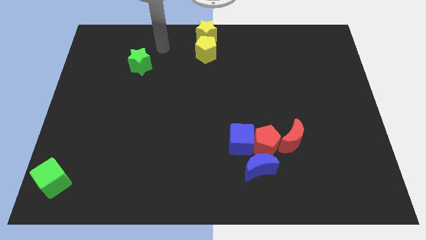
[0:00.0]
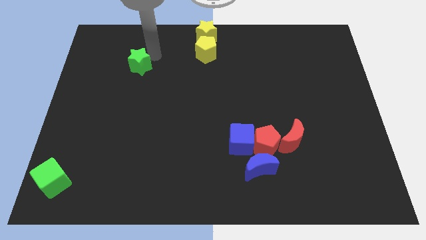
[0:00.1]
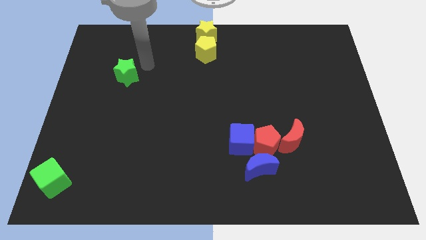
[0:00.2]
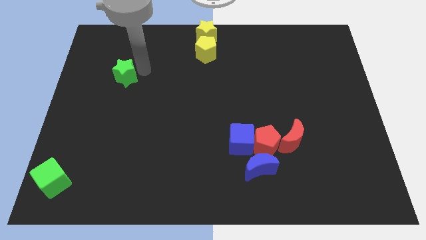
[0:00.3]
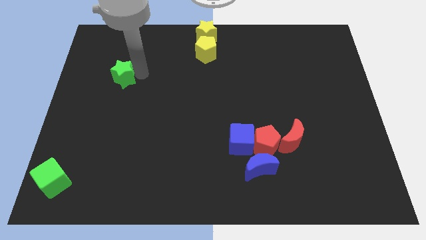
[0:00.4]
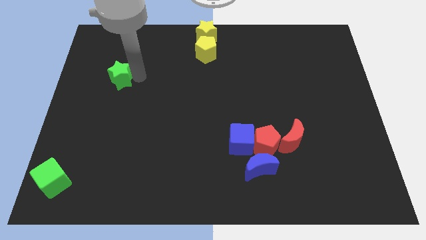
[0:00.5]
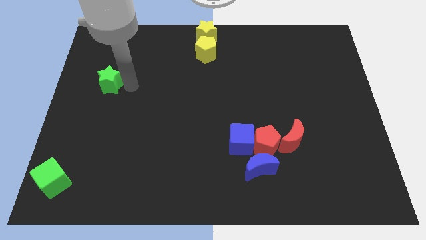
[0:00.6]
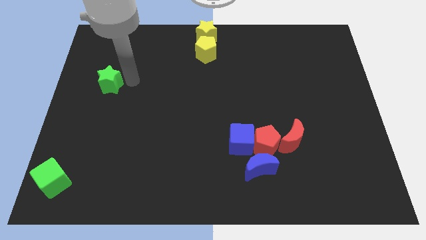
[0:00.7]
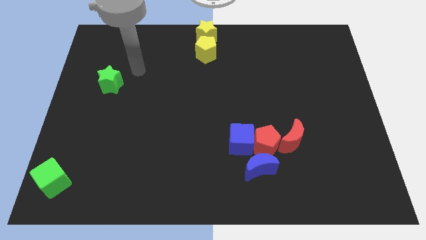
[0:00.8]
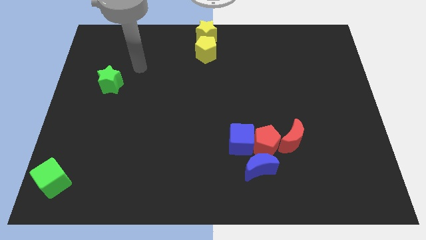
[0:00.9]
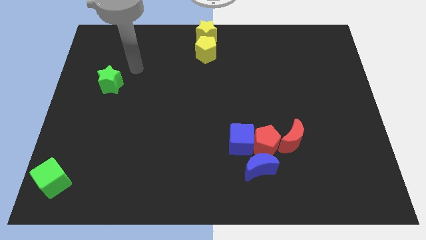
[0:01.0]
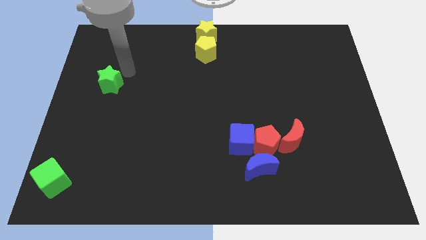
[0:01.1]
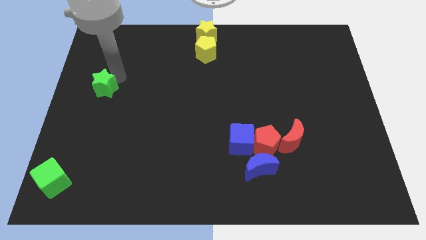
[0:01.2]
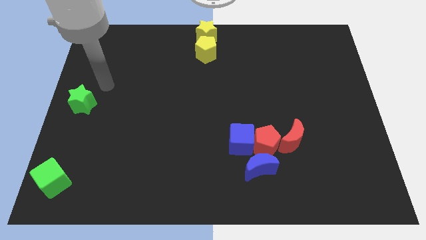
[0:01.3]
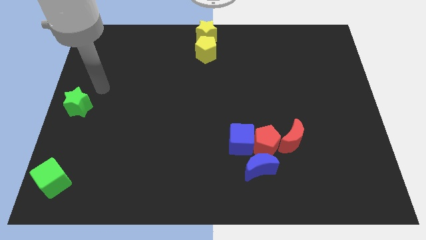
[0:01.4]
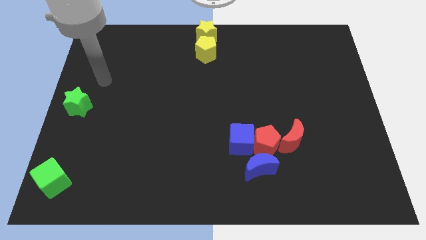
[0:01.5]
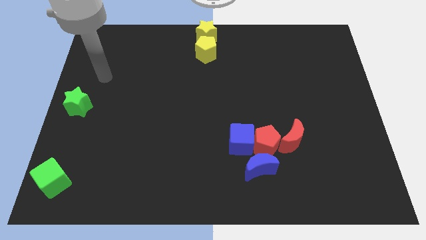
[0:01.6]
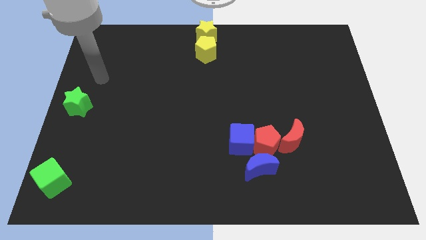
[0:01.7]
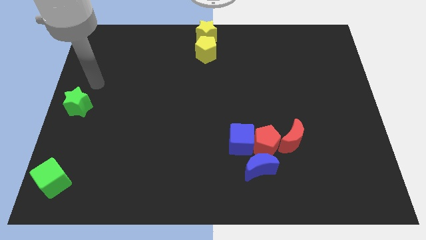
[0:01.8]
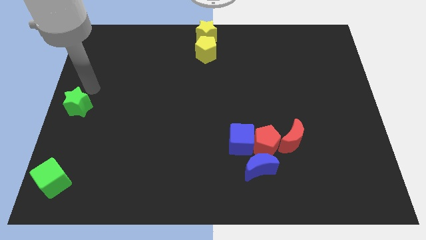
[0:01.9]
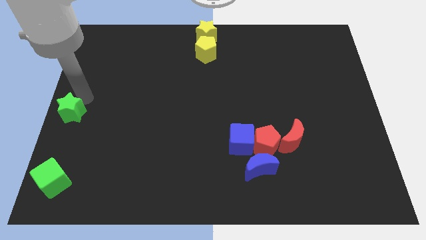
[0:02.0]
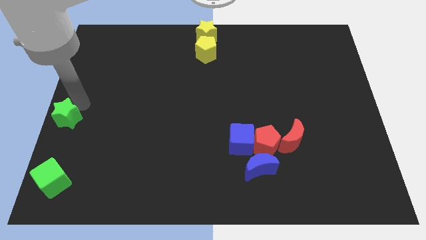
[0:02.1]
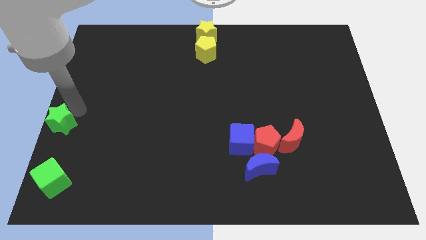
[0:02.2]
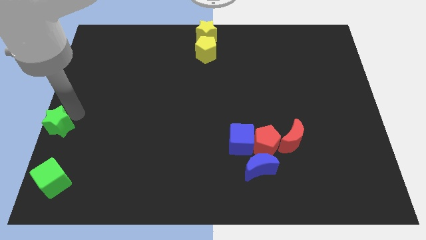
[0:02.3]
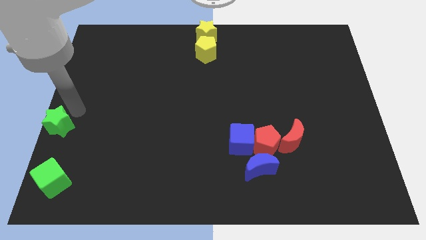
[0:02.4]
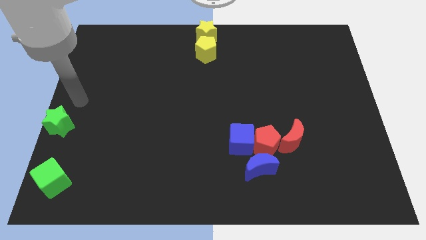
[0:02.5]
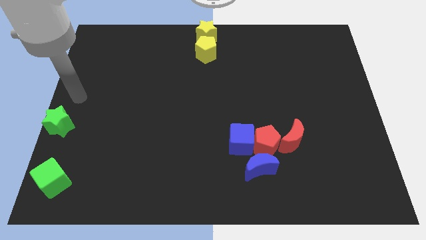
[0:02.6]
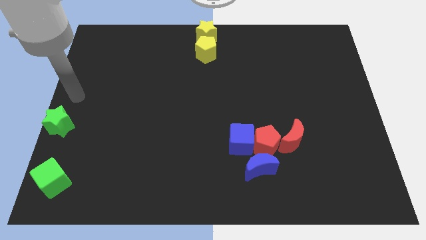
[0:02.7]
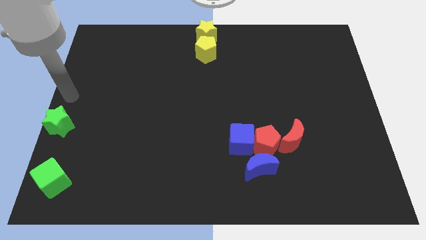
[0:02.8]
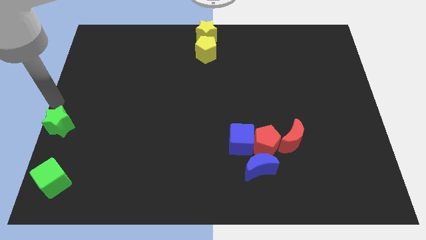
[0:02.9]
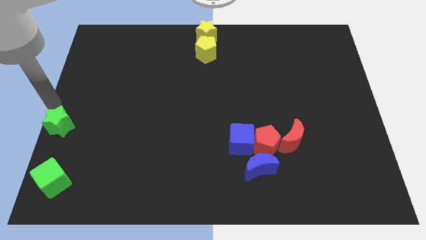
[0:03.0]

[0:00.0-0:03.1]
move the green star to the left center

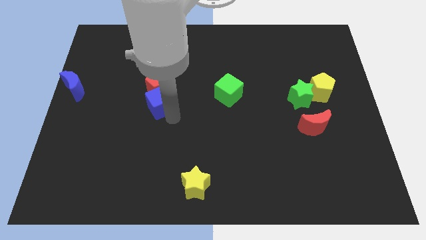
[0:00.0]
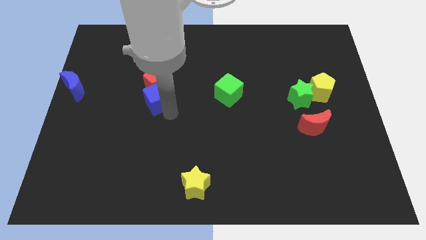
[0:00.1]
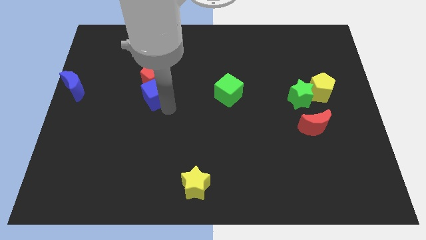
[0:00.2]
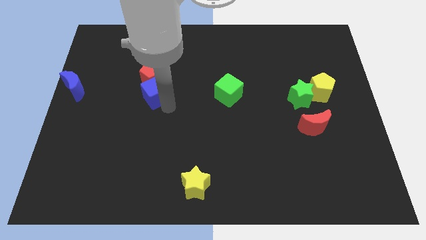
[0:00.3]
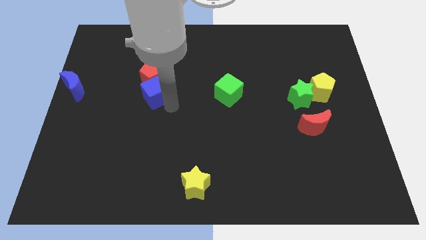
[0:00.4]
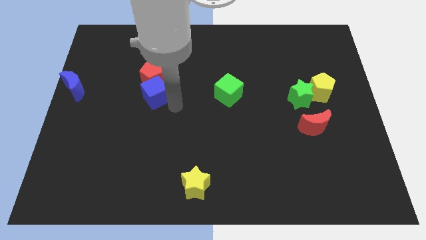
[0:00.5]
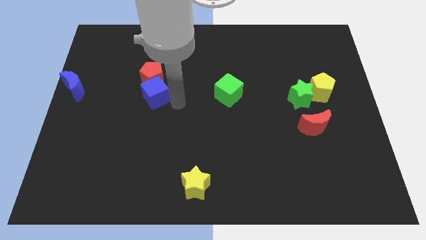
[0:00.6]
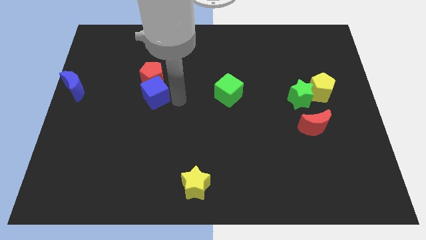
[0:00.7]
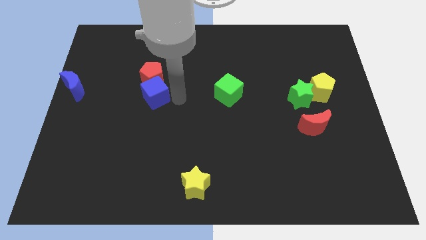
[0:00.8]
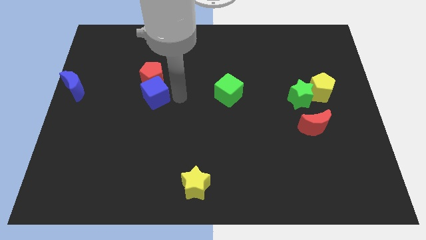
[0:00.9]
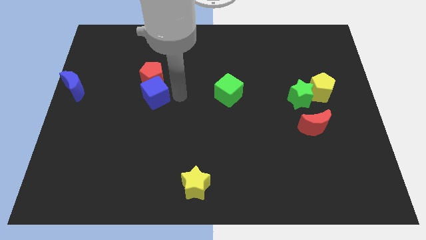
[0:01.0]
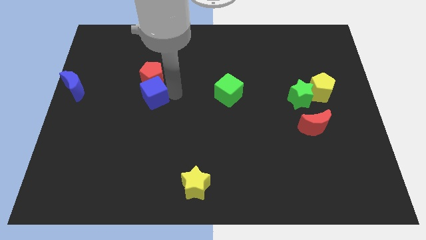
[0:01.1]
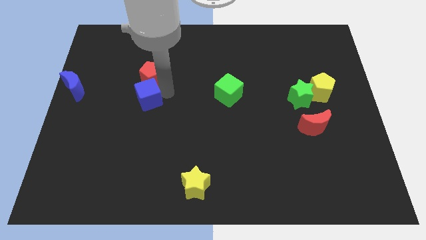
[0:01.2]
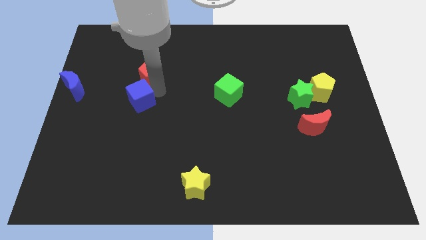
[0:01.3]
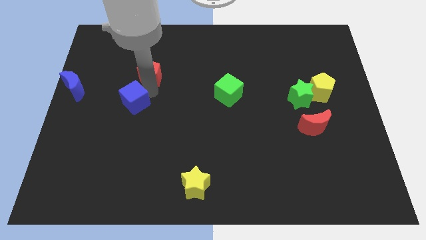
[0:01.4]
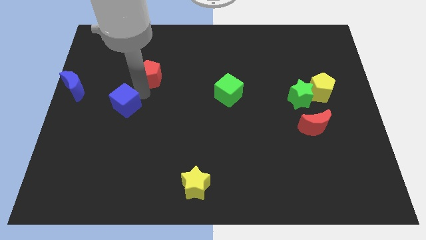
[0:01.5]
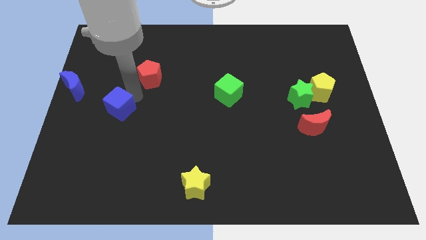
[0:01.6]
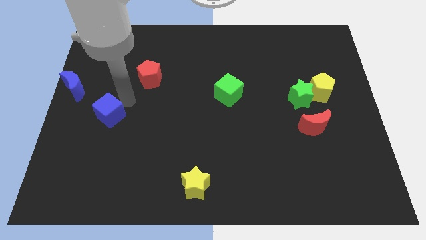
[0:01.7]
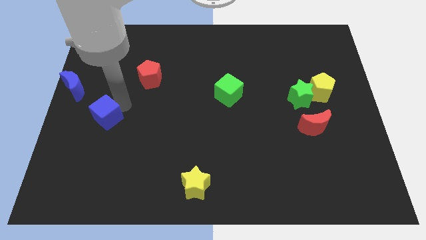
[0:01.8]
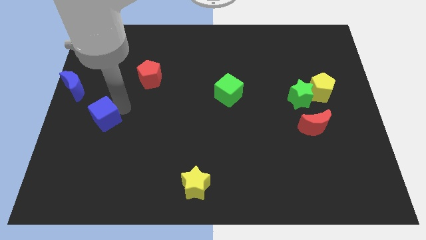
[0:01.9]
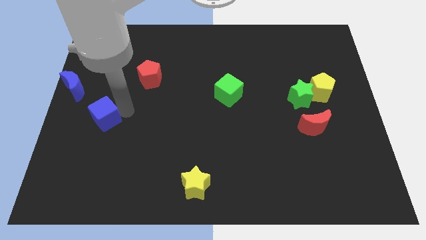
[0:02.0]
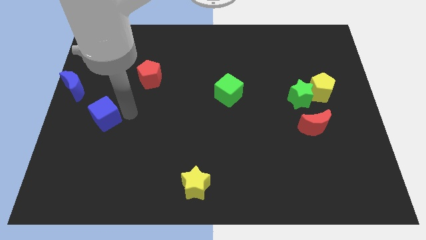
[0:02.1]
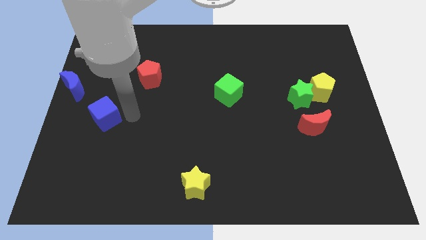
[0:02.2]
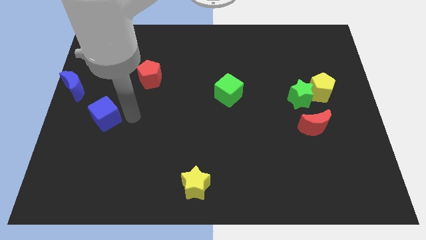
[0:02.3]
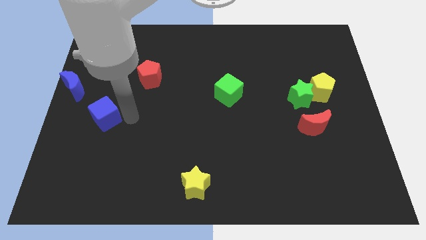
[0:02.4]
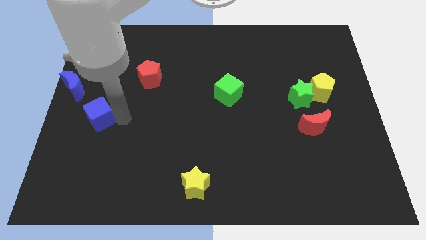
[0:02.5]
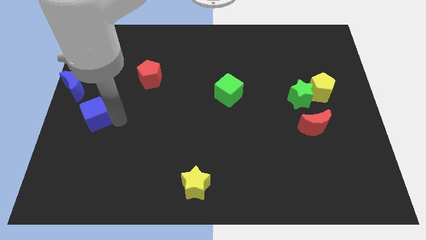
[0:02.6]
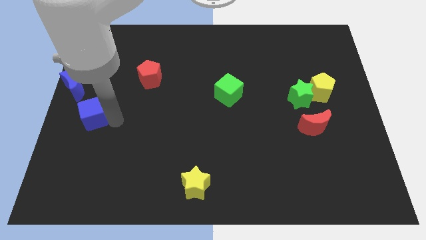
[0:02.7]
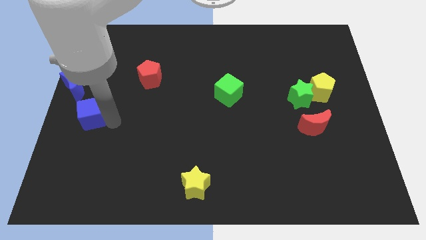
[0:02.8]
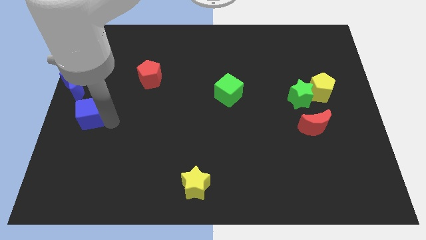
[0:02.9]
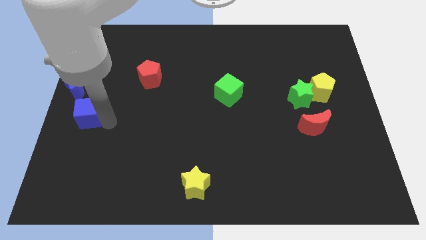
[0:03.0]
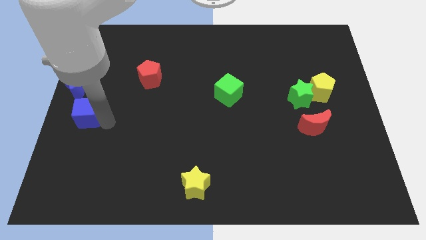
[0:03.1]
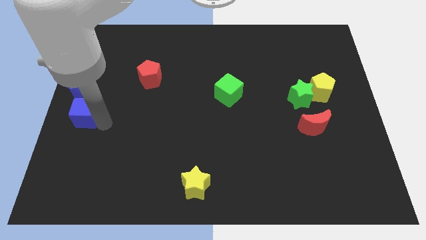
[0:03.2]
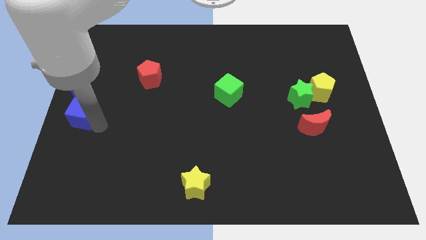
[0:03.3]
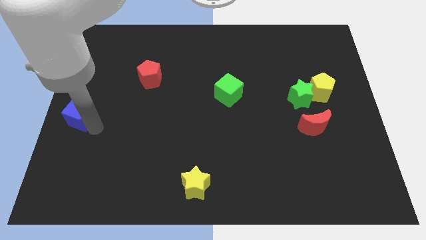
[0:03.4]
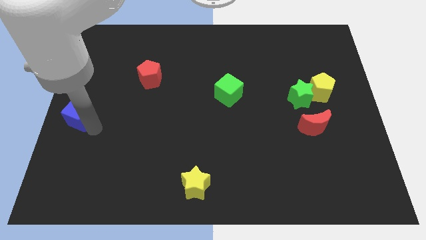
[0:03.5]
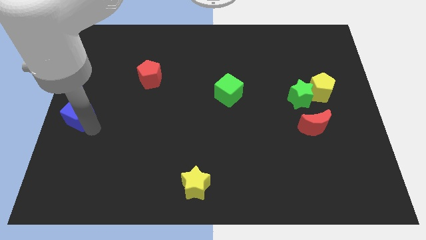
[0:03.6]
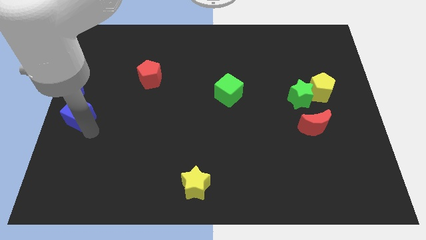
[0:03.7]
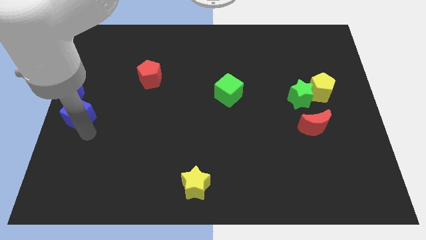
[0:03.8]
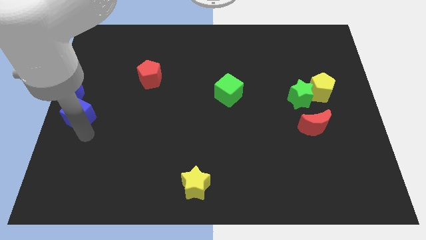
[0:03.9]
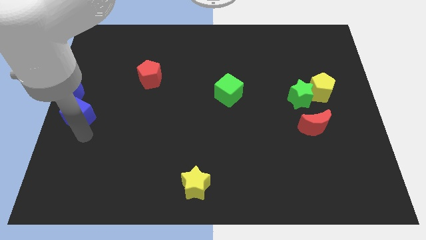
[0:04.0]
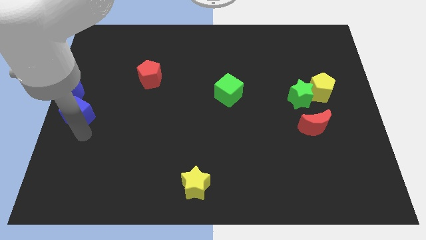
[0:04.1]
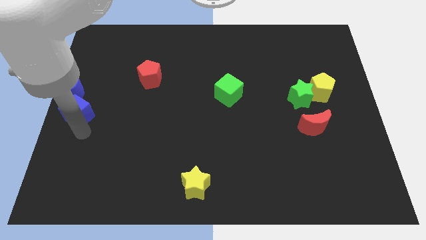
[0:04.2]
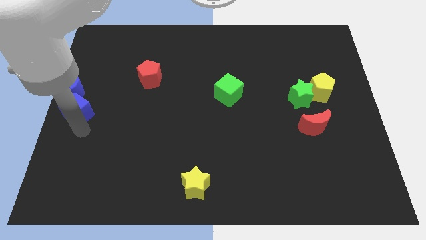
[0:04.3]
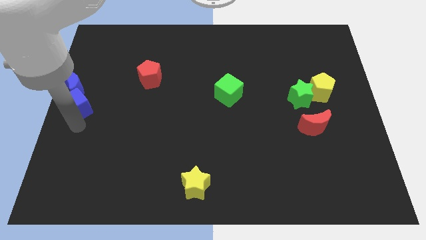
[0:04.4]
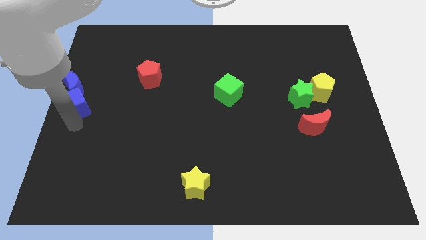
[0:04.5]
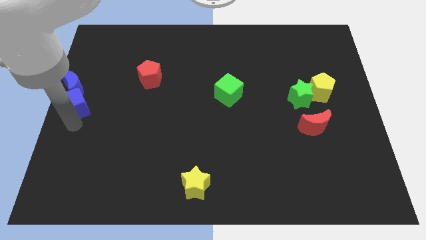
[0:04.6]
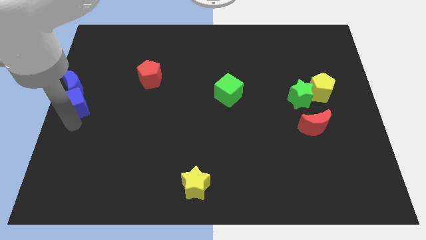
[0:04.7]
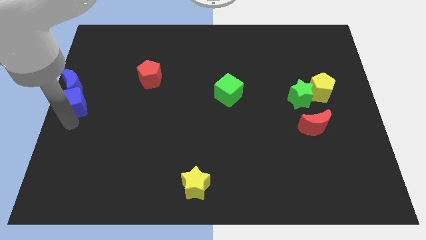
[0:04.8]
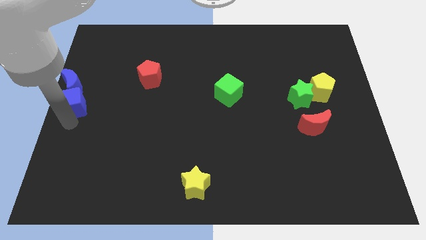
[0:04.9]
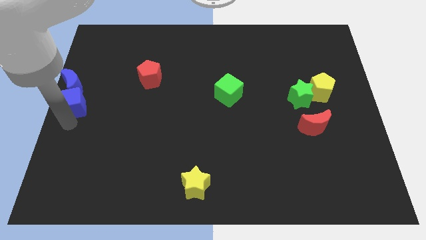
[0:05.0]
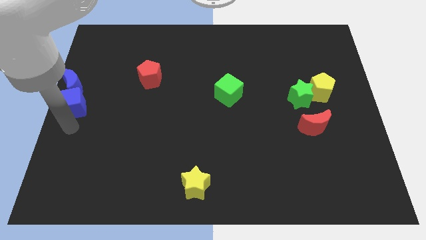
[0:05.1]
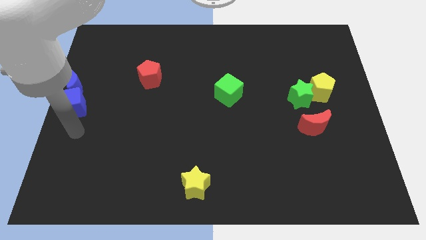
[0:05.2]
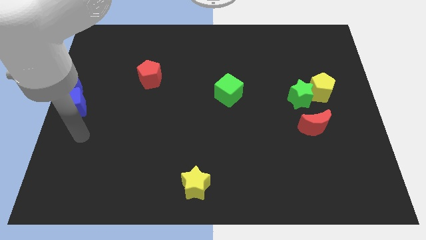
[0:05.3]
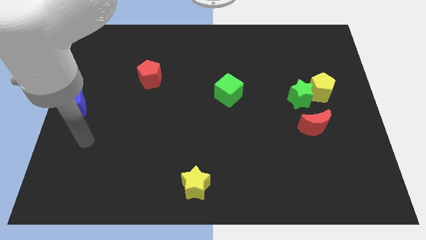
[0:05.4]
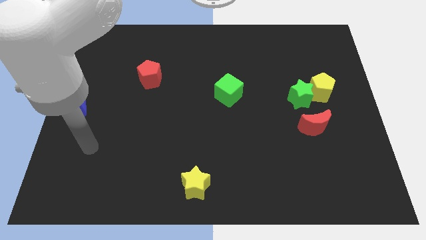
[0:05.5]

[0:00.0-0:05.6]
move the blue cube to the bottom of blue crescent

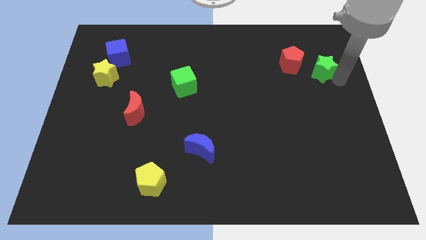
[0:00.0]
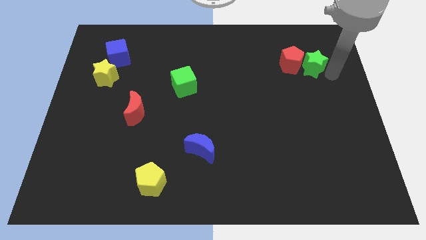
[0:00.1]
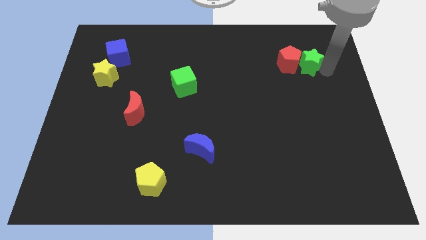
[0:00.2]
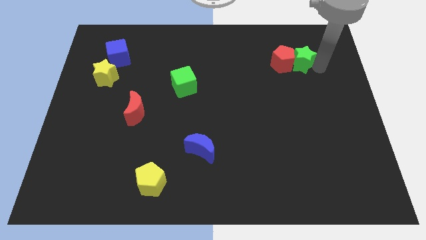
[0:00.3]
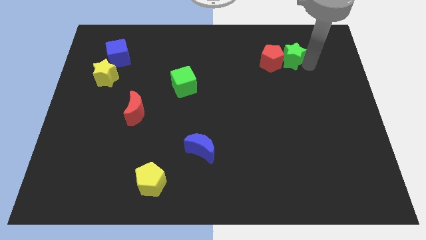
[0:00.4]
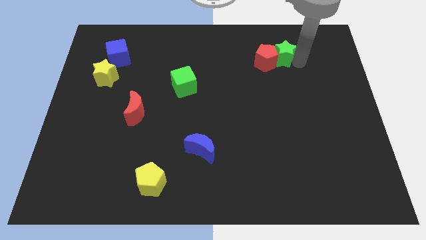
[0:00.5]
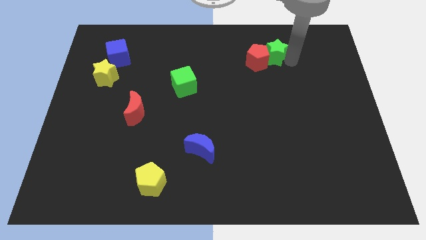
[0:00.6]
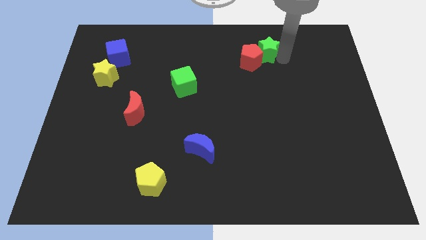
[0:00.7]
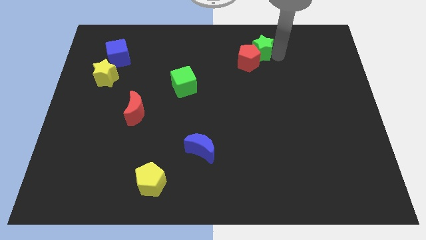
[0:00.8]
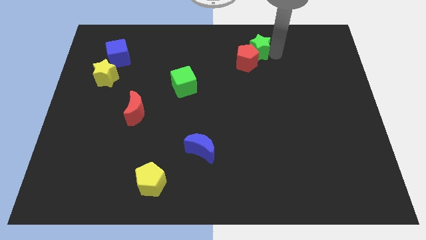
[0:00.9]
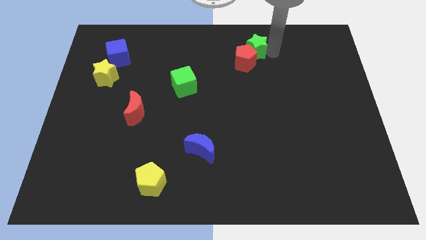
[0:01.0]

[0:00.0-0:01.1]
push green star ino the red pentagon
